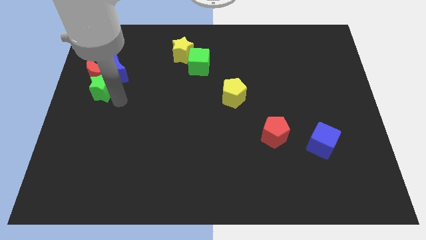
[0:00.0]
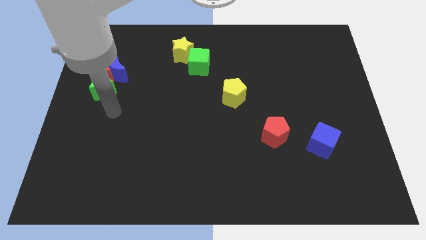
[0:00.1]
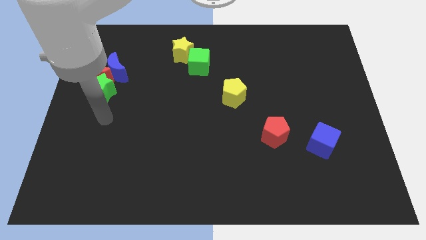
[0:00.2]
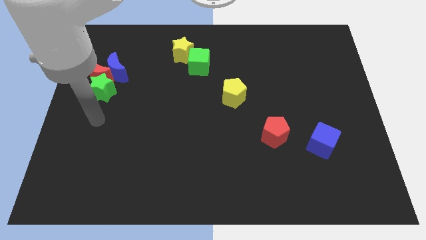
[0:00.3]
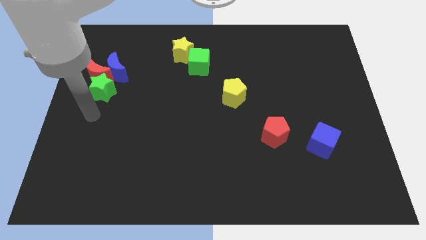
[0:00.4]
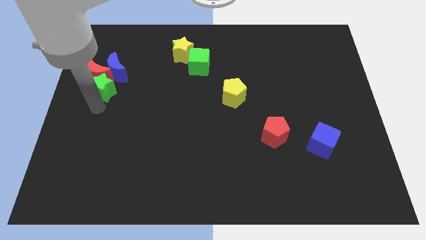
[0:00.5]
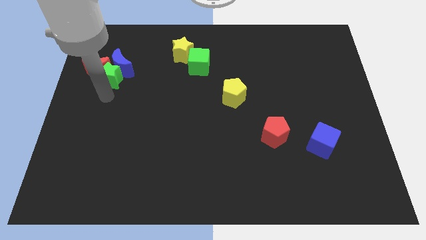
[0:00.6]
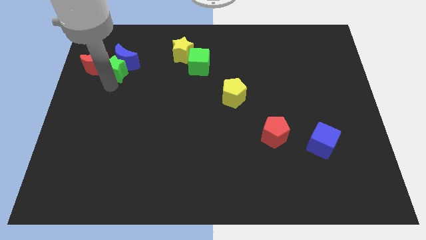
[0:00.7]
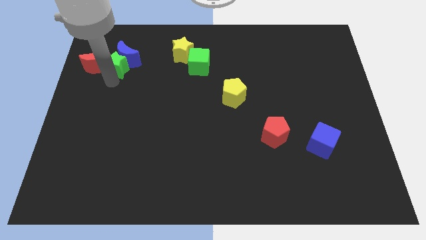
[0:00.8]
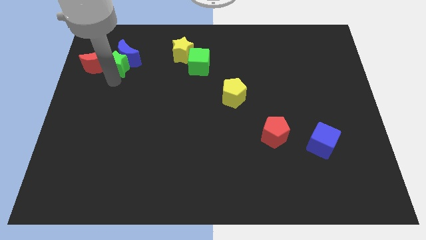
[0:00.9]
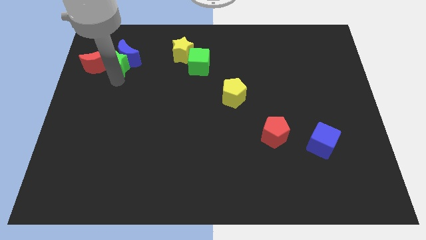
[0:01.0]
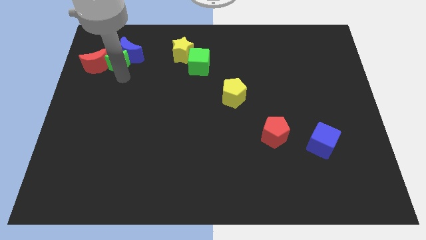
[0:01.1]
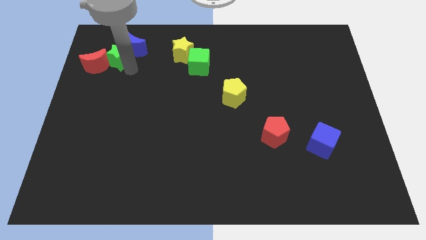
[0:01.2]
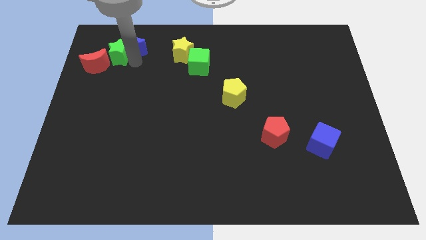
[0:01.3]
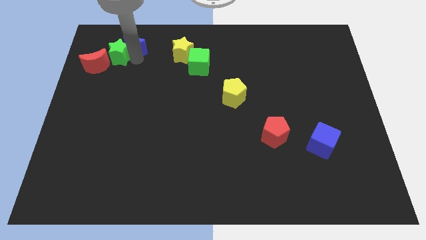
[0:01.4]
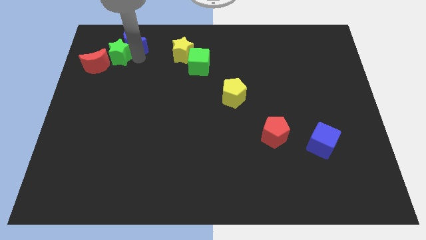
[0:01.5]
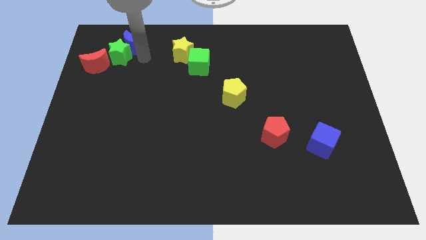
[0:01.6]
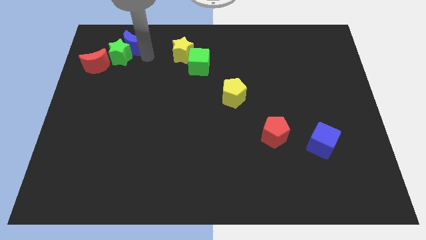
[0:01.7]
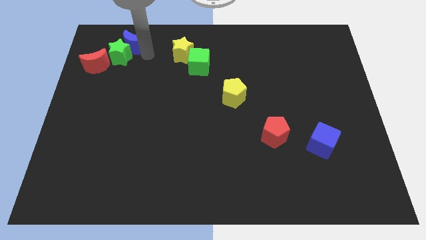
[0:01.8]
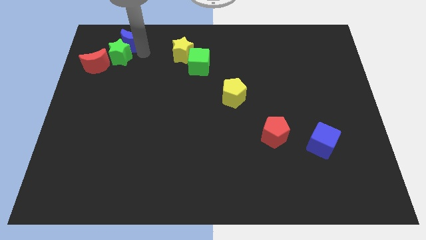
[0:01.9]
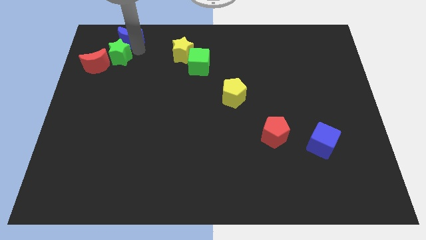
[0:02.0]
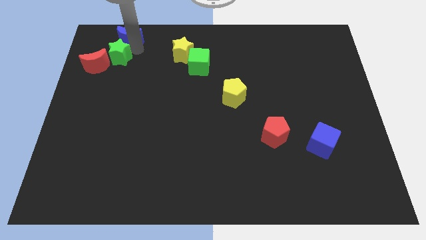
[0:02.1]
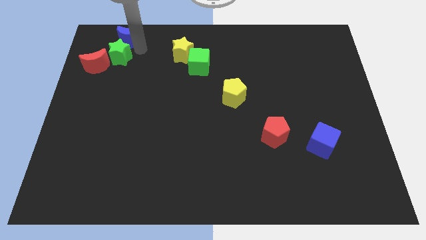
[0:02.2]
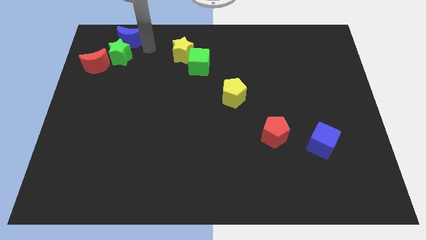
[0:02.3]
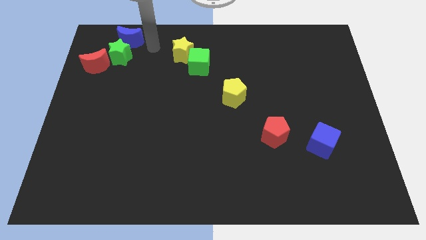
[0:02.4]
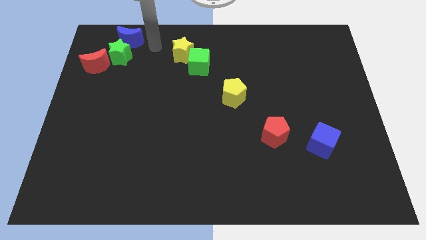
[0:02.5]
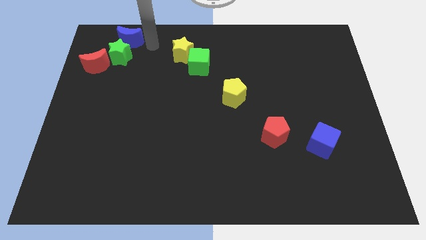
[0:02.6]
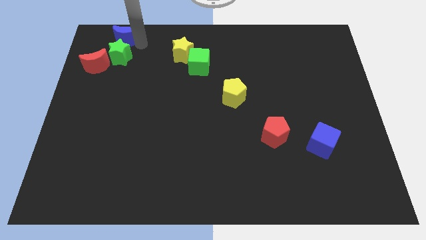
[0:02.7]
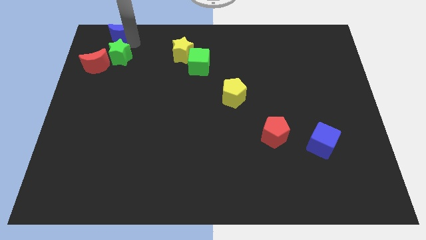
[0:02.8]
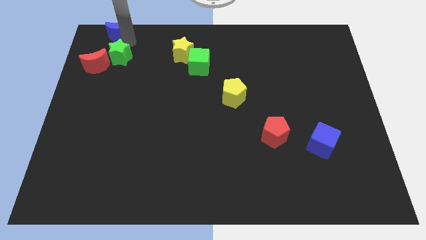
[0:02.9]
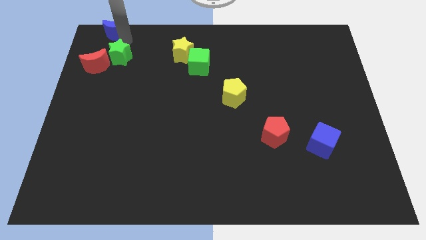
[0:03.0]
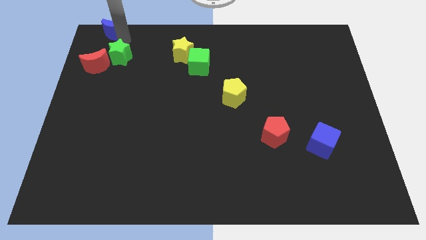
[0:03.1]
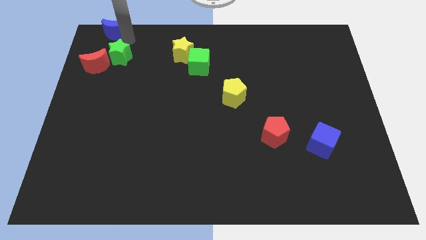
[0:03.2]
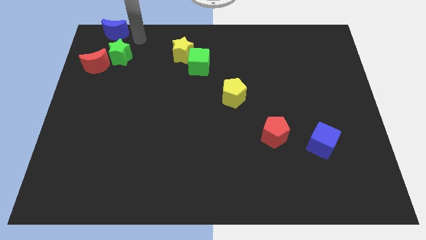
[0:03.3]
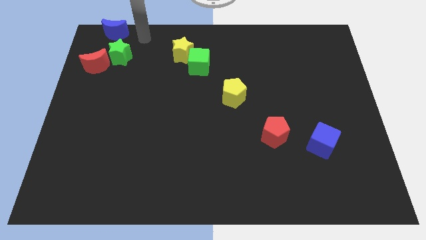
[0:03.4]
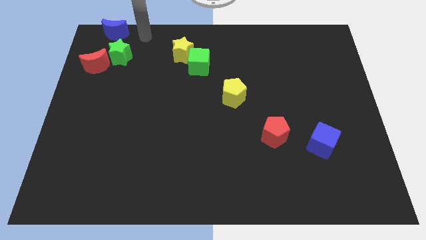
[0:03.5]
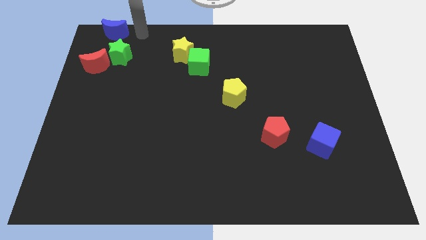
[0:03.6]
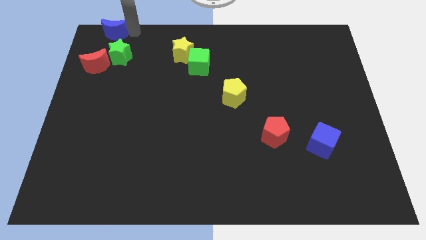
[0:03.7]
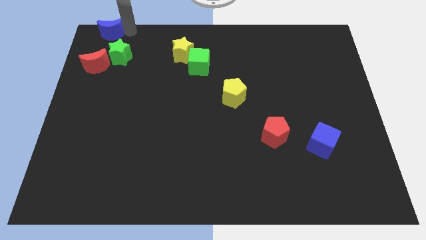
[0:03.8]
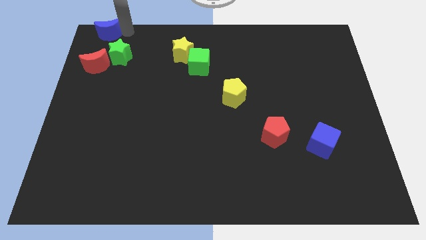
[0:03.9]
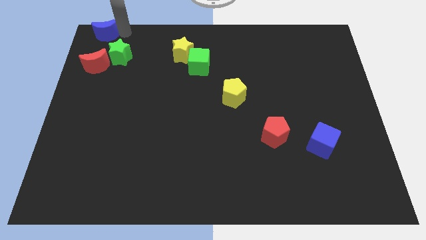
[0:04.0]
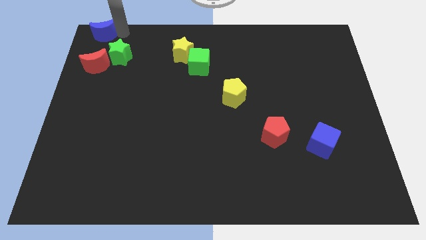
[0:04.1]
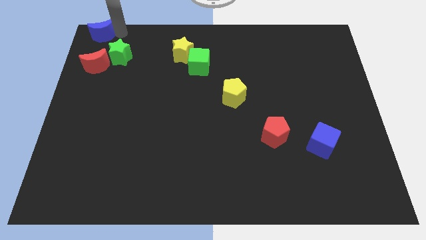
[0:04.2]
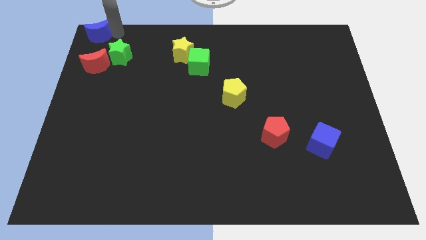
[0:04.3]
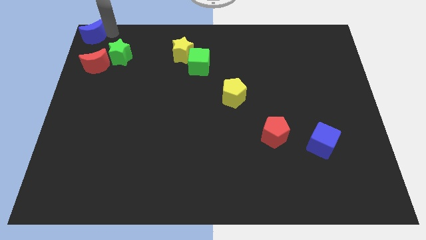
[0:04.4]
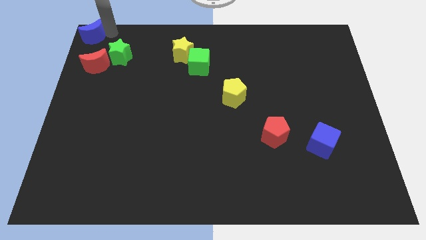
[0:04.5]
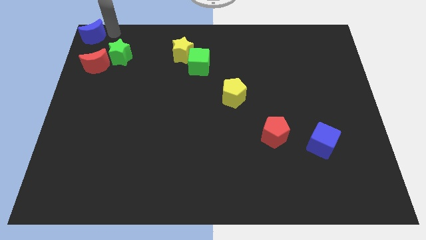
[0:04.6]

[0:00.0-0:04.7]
push the blue crescent to the top left corner of the table

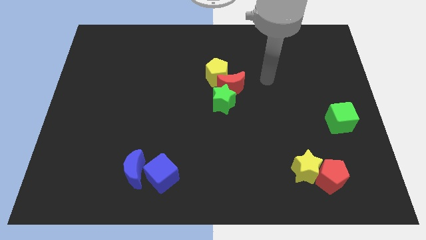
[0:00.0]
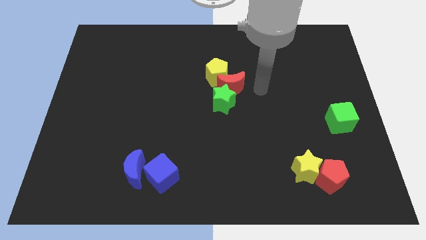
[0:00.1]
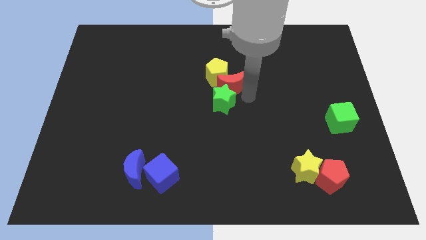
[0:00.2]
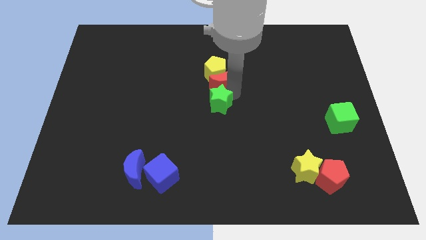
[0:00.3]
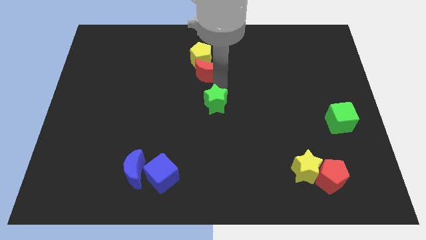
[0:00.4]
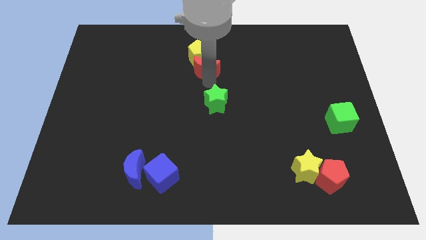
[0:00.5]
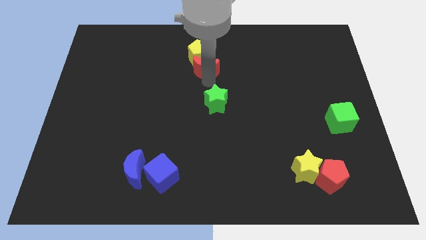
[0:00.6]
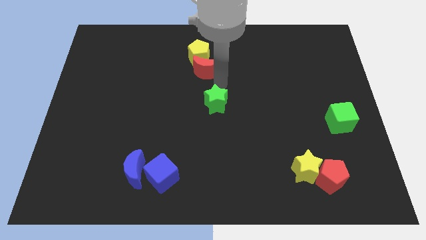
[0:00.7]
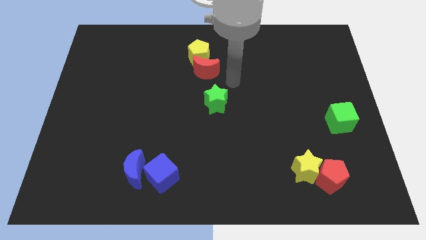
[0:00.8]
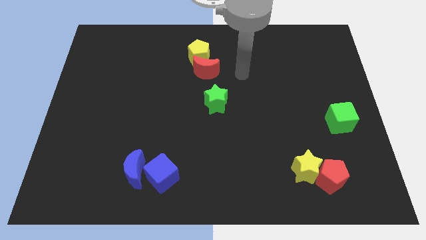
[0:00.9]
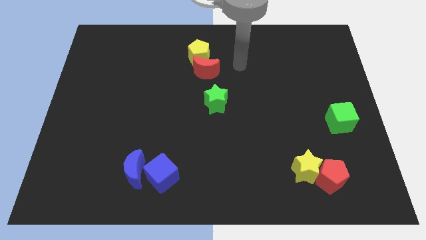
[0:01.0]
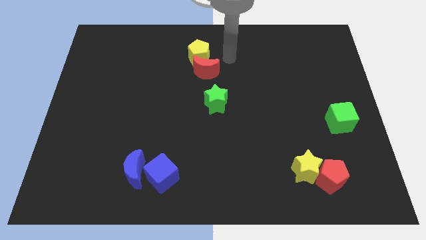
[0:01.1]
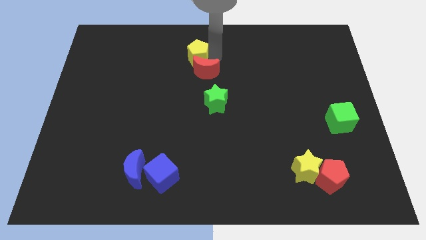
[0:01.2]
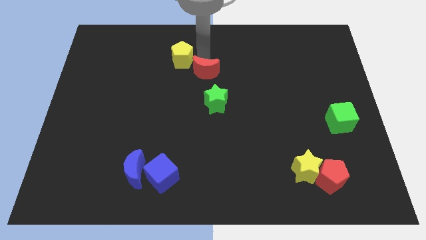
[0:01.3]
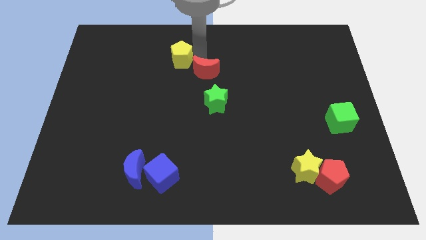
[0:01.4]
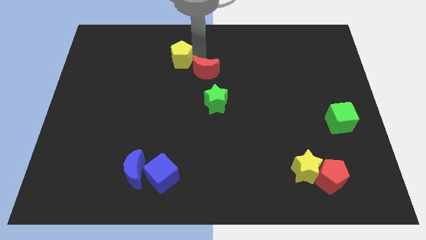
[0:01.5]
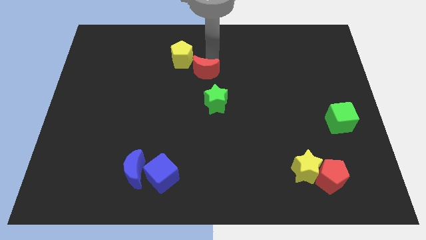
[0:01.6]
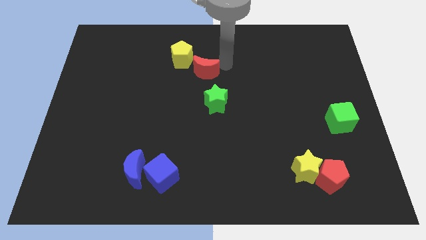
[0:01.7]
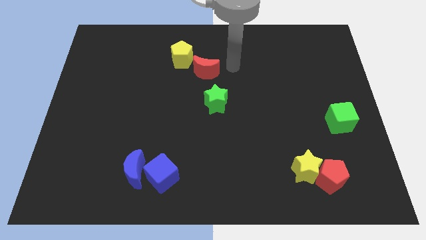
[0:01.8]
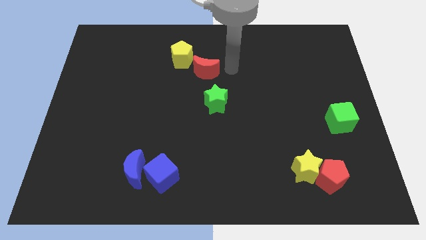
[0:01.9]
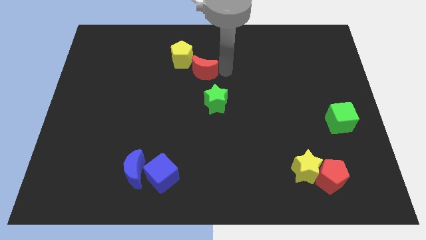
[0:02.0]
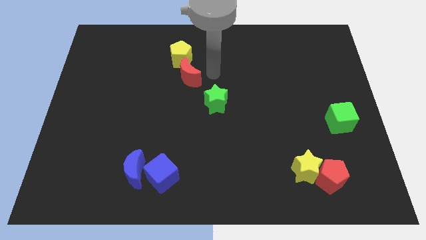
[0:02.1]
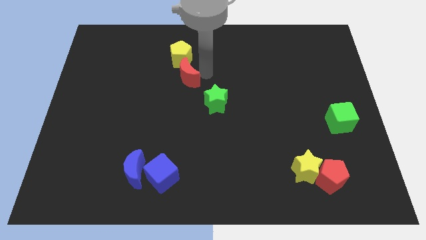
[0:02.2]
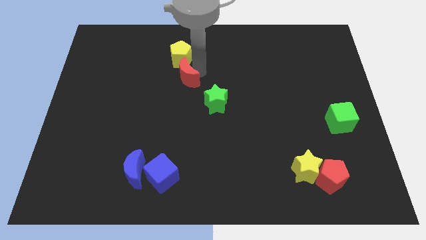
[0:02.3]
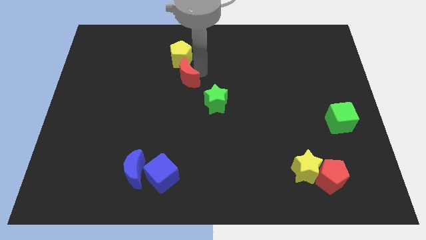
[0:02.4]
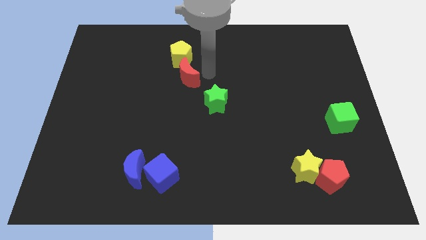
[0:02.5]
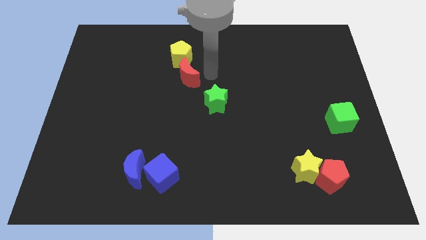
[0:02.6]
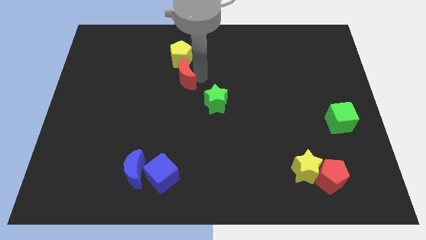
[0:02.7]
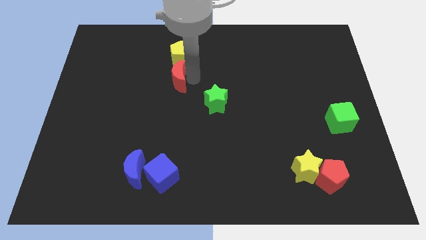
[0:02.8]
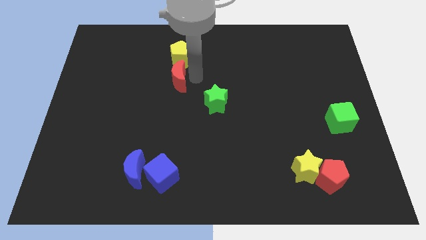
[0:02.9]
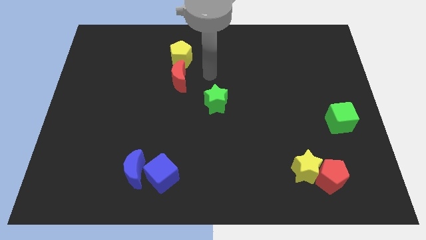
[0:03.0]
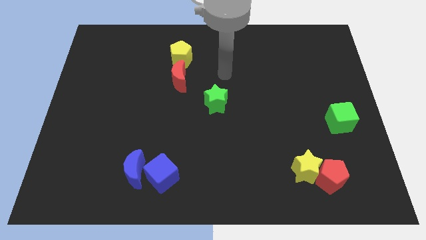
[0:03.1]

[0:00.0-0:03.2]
move the red moon vertically below the yellow pentagon

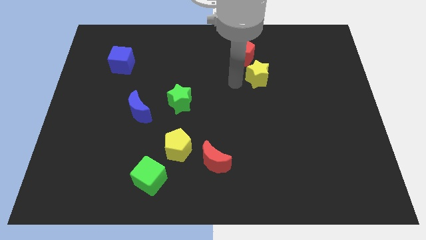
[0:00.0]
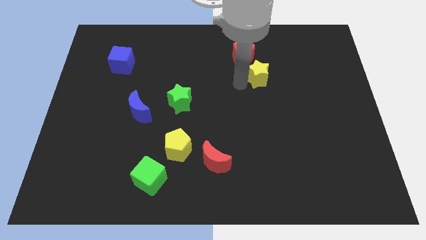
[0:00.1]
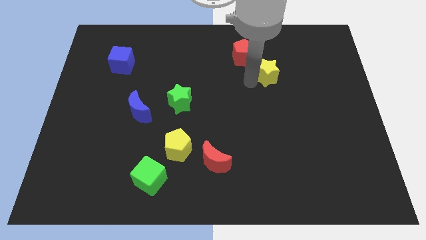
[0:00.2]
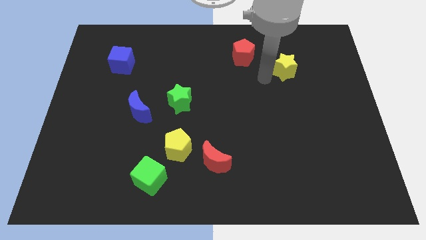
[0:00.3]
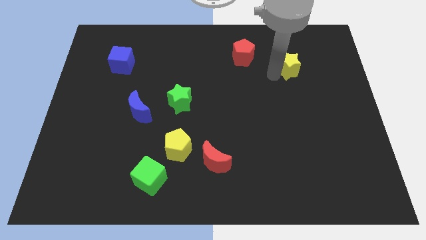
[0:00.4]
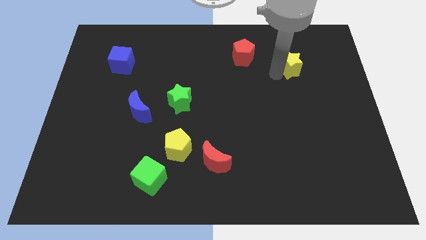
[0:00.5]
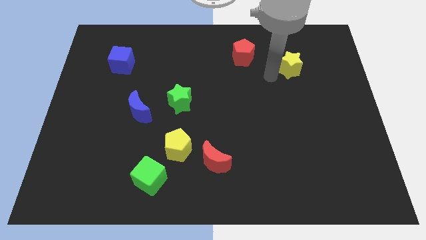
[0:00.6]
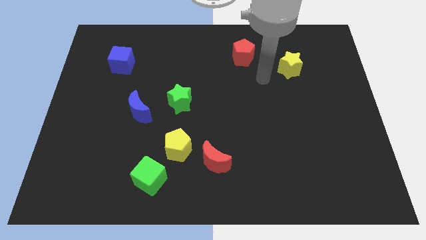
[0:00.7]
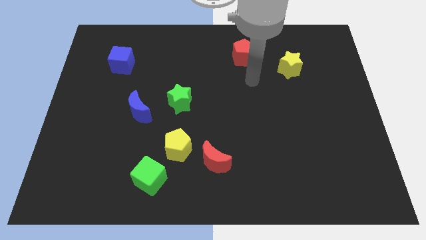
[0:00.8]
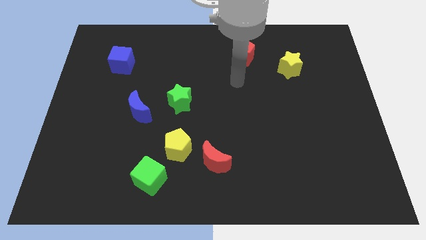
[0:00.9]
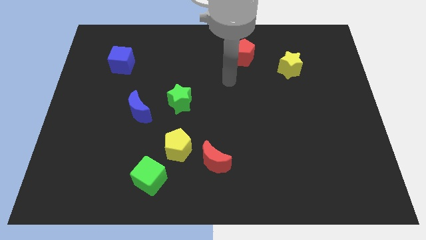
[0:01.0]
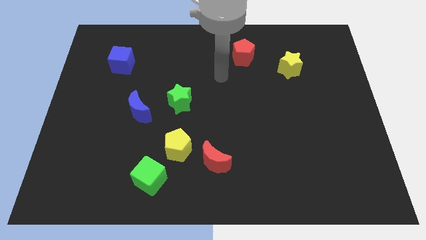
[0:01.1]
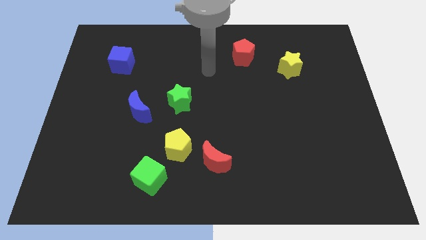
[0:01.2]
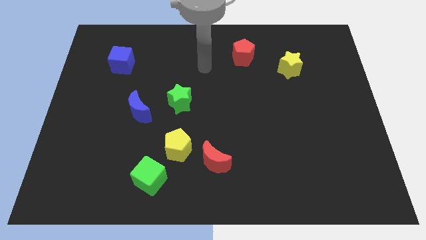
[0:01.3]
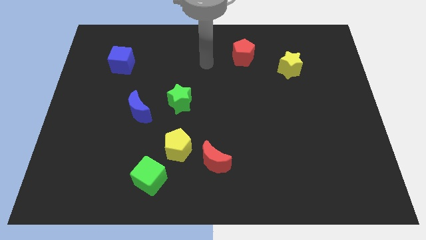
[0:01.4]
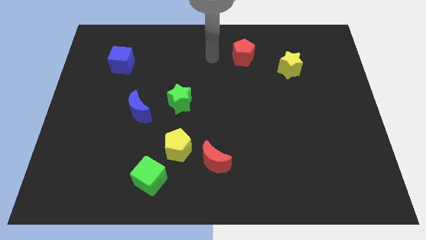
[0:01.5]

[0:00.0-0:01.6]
push the yellow star to the top right corner of the board
